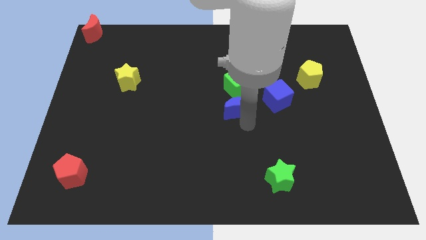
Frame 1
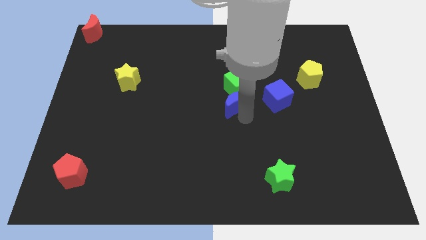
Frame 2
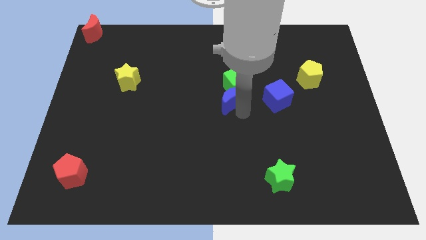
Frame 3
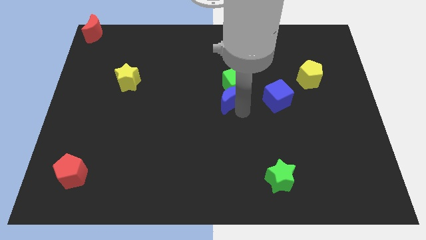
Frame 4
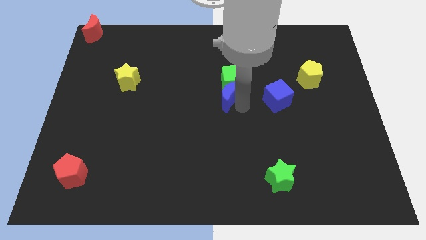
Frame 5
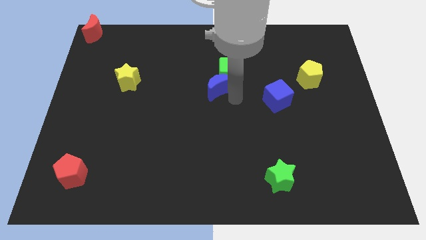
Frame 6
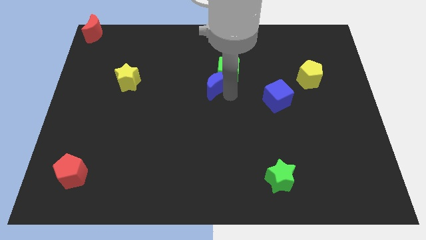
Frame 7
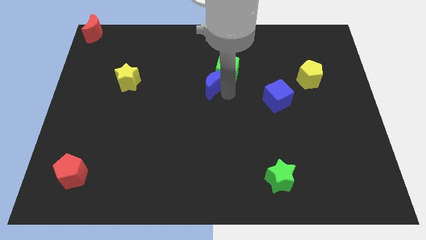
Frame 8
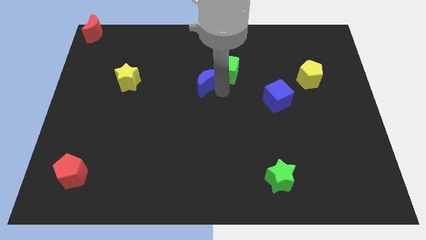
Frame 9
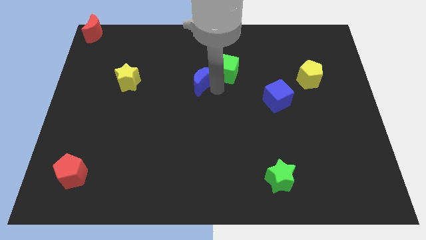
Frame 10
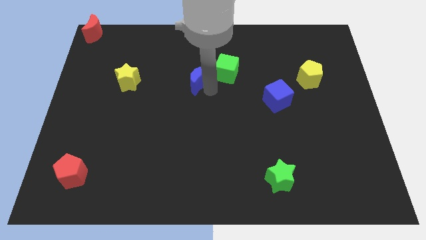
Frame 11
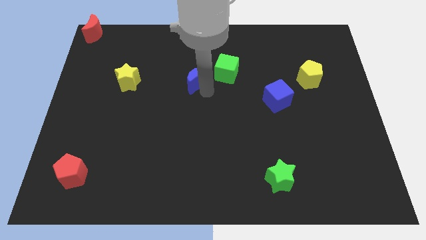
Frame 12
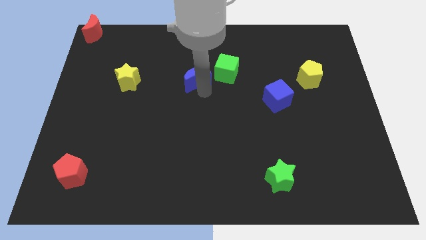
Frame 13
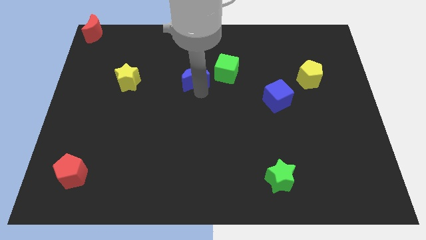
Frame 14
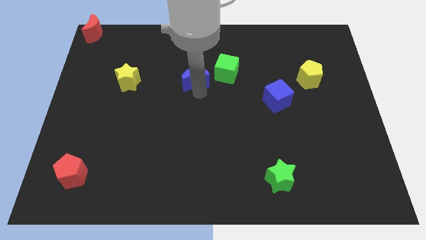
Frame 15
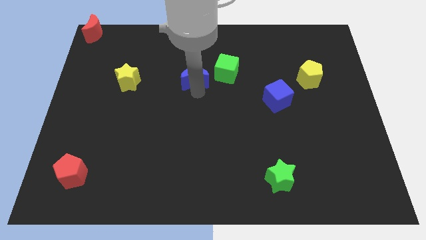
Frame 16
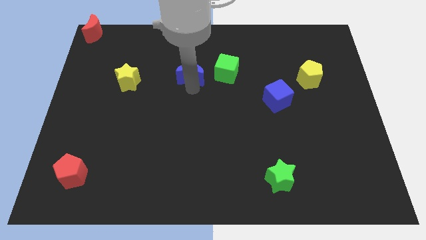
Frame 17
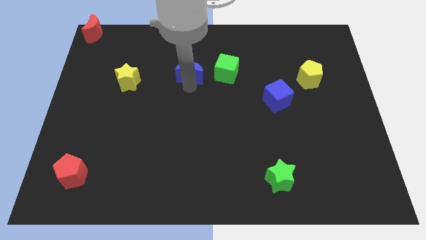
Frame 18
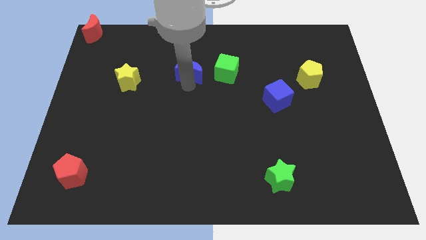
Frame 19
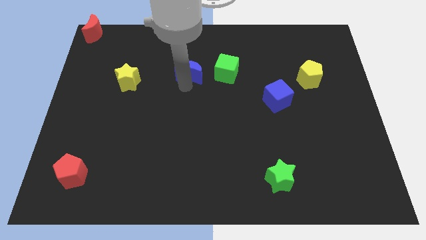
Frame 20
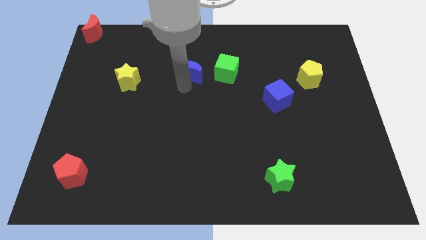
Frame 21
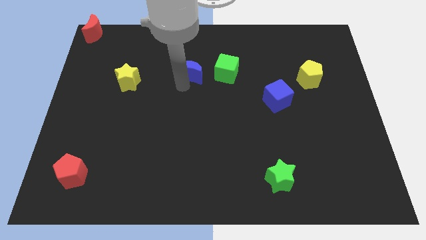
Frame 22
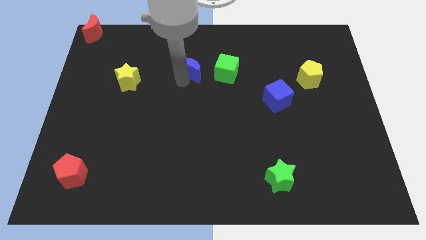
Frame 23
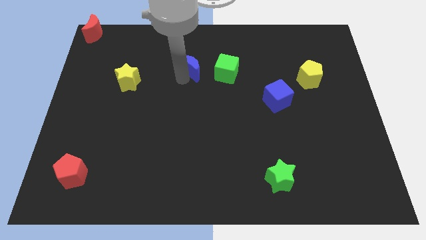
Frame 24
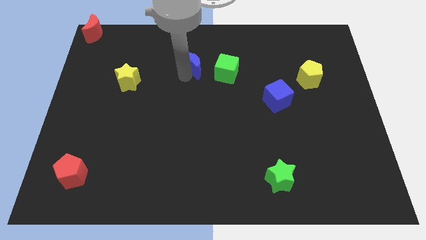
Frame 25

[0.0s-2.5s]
slide the blue moon to the left of the green cube

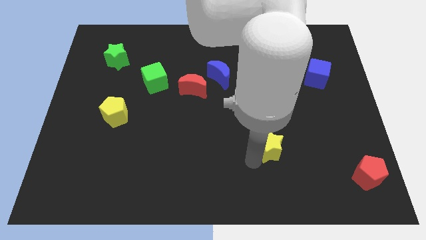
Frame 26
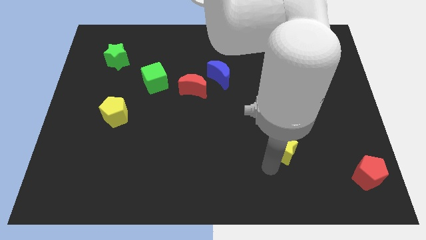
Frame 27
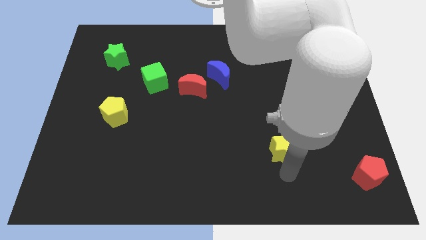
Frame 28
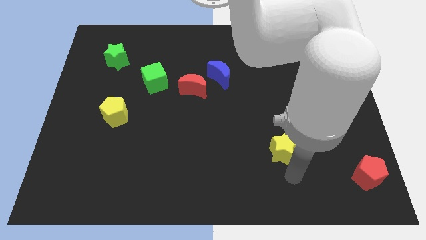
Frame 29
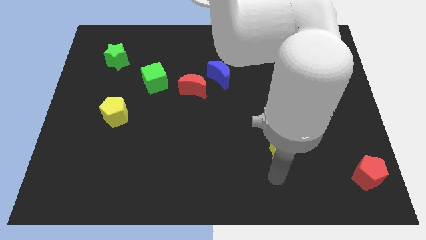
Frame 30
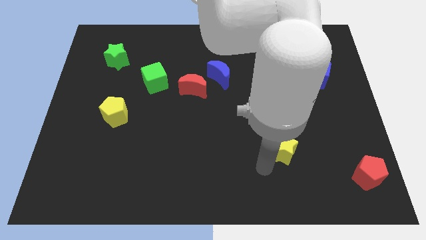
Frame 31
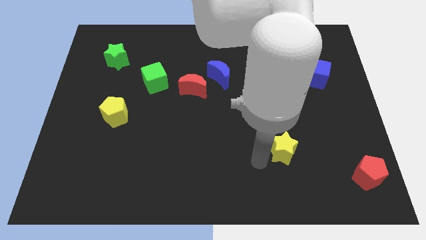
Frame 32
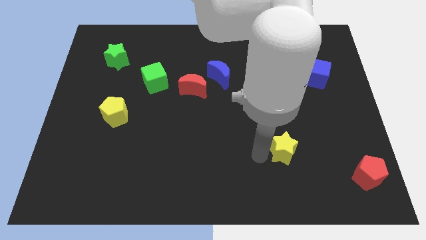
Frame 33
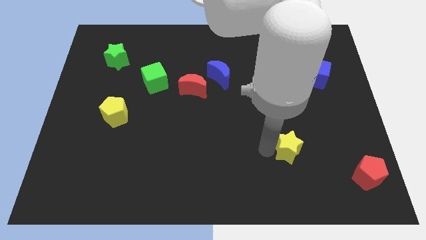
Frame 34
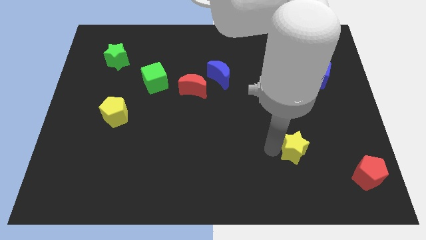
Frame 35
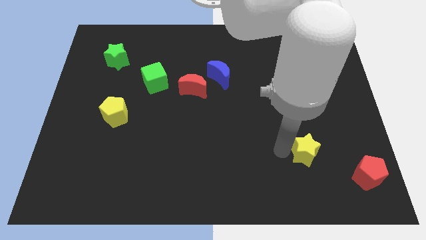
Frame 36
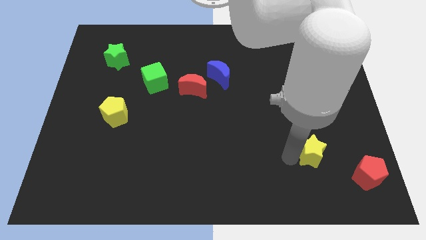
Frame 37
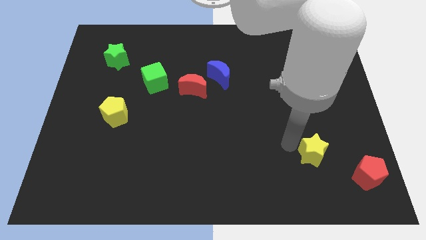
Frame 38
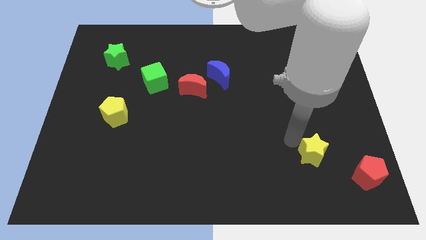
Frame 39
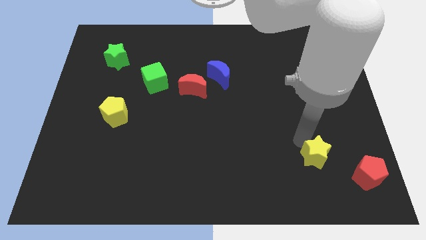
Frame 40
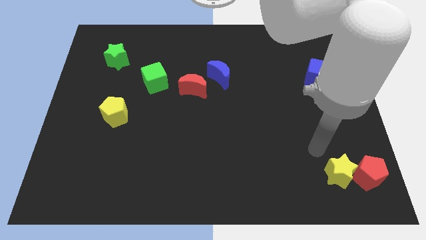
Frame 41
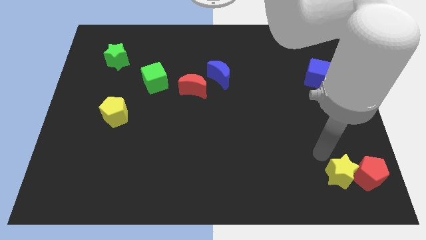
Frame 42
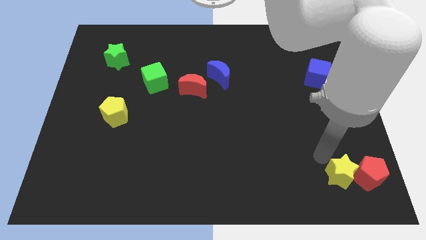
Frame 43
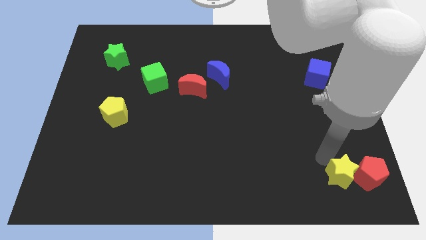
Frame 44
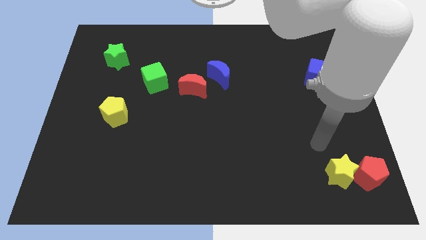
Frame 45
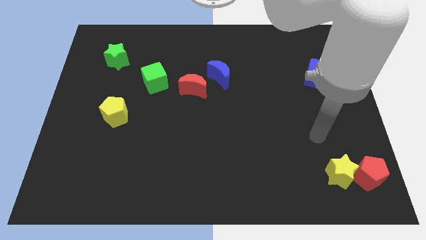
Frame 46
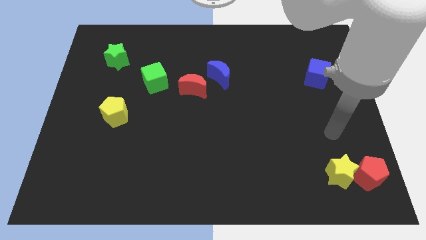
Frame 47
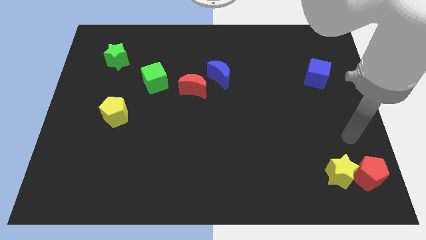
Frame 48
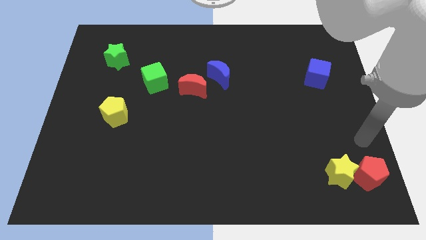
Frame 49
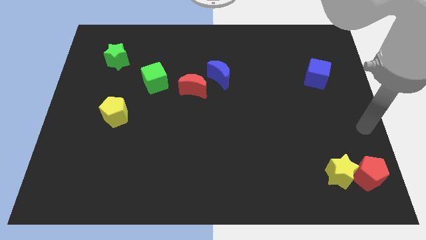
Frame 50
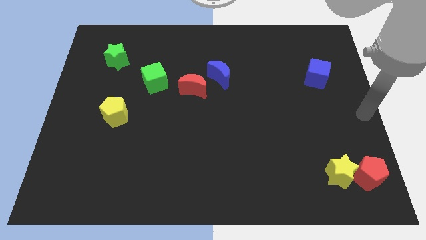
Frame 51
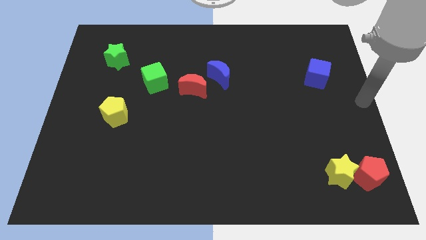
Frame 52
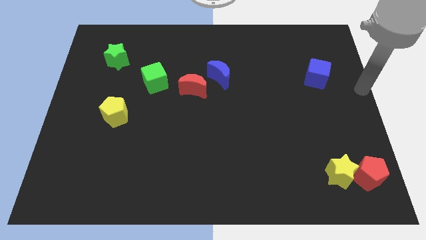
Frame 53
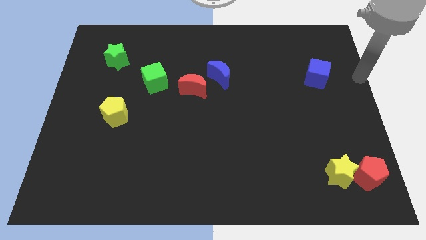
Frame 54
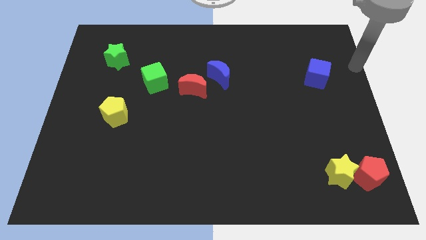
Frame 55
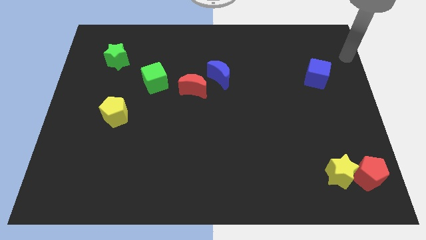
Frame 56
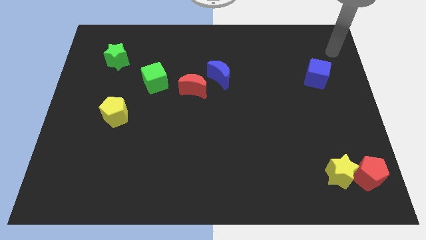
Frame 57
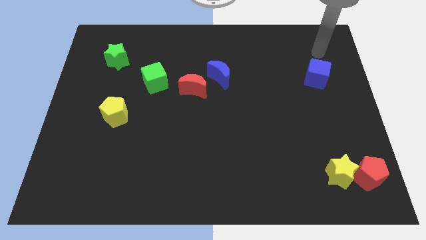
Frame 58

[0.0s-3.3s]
place the yellow star to the left side of the red pentagon

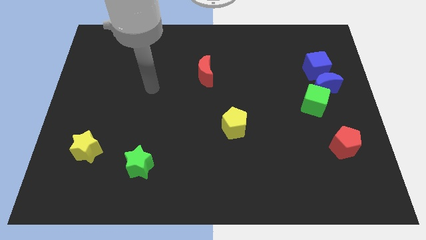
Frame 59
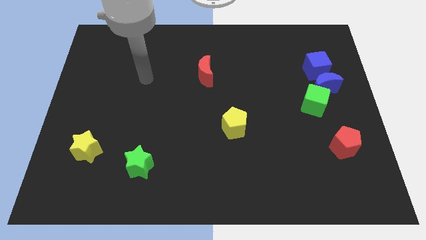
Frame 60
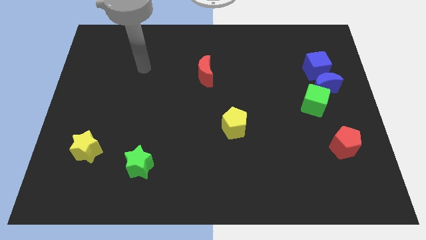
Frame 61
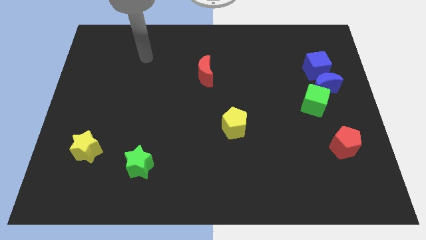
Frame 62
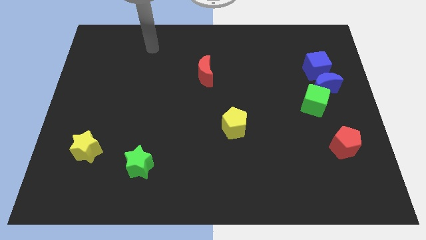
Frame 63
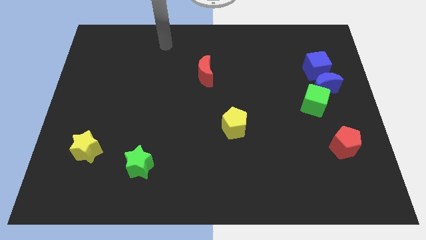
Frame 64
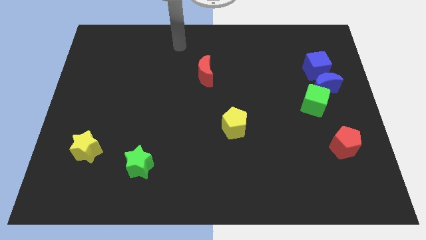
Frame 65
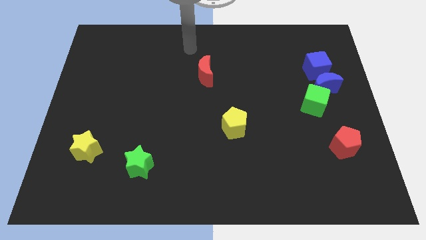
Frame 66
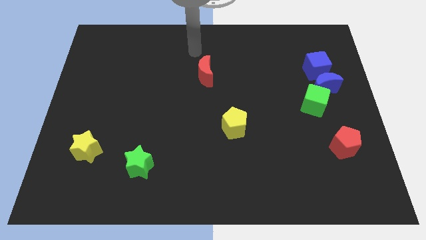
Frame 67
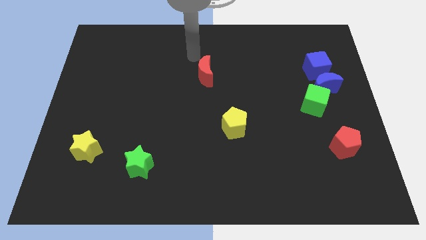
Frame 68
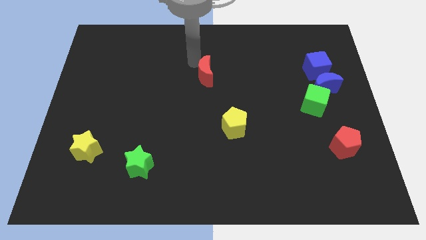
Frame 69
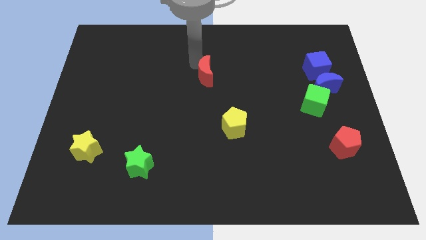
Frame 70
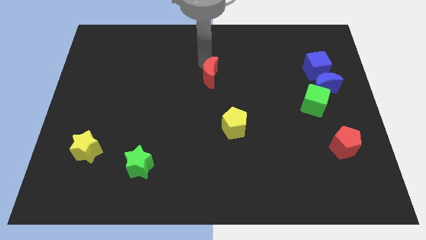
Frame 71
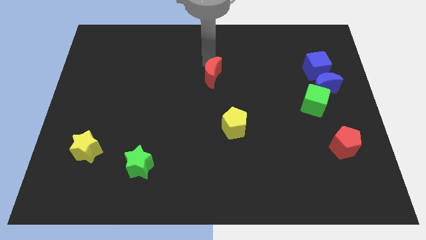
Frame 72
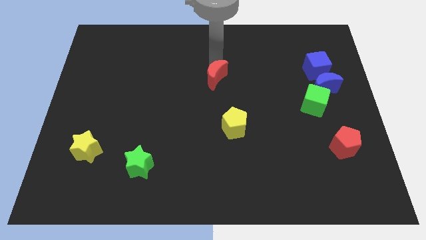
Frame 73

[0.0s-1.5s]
place the arm above the red moon

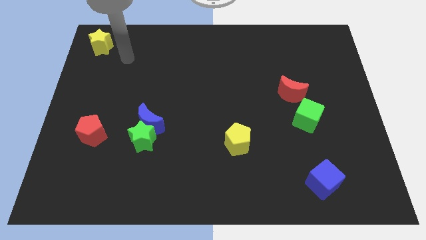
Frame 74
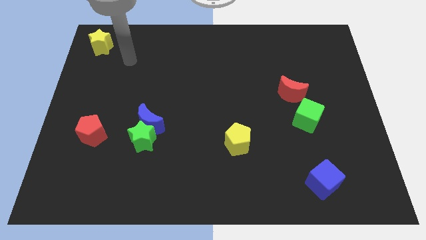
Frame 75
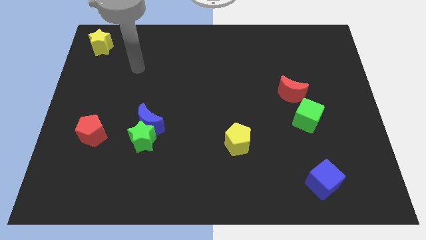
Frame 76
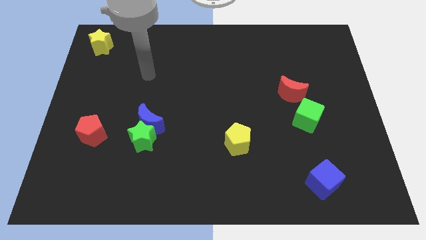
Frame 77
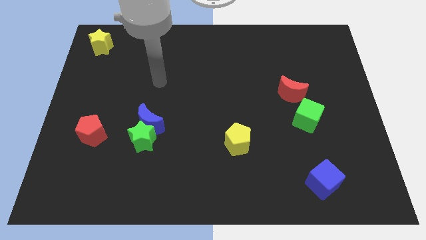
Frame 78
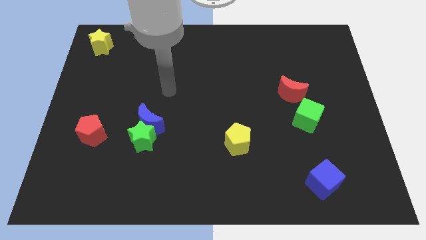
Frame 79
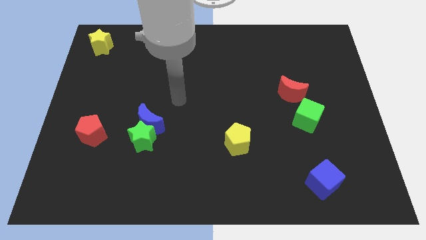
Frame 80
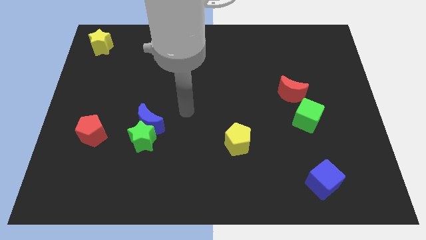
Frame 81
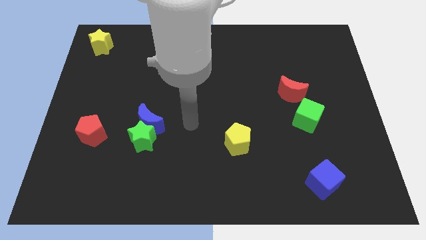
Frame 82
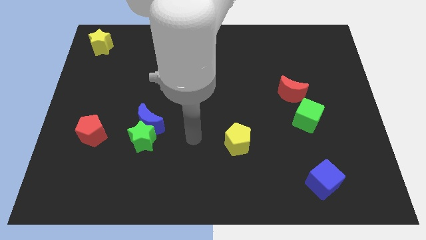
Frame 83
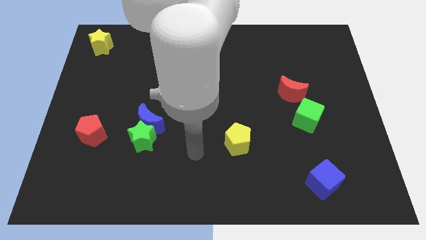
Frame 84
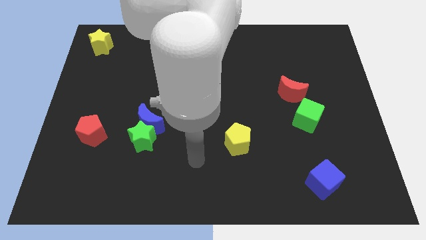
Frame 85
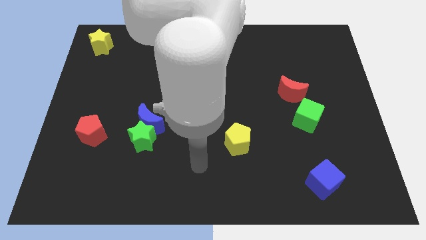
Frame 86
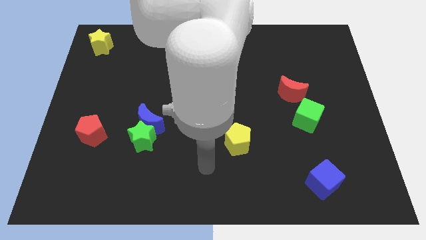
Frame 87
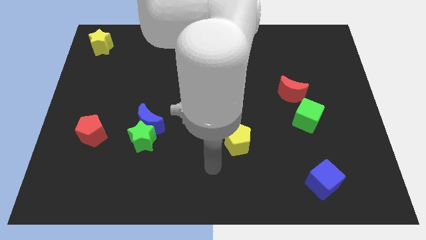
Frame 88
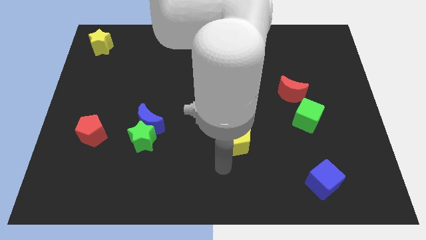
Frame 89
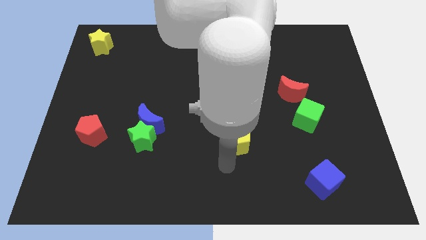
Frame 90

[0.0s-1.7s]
move your arm to the bottom of the yellow pentagon
